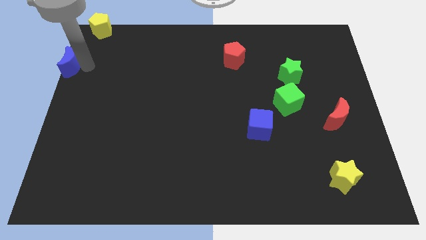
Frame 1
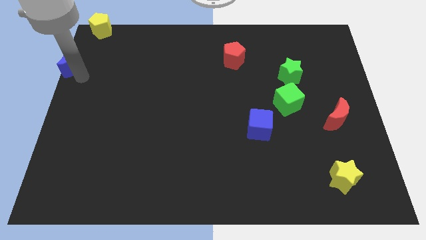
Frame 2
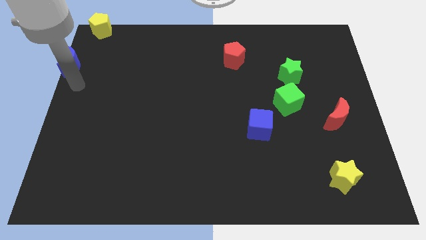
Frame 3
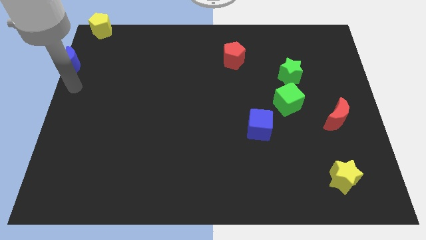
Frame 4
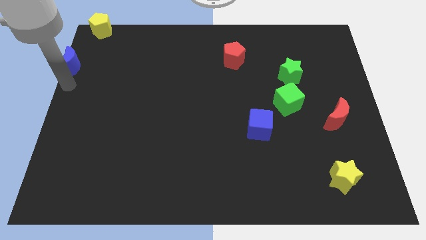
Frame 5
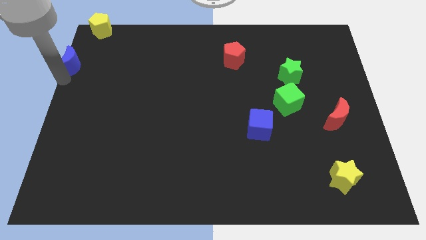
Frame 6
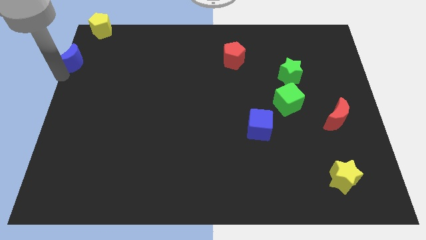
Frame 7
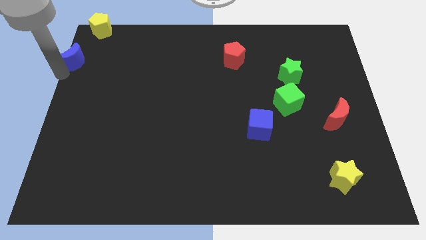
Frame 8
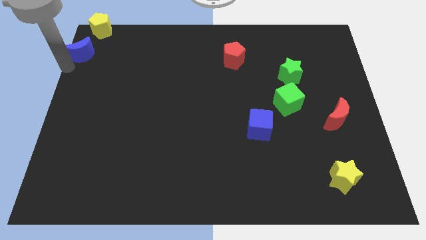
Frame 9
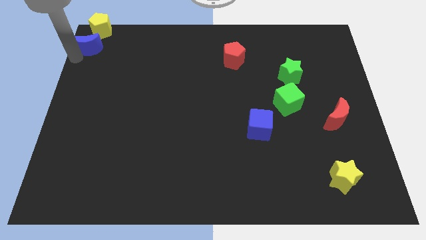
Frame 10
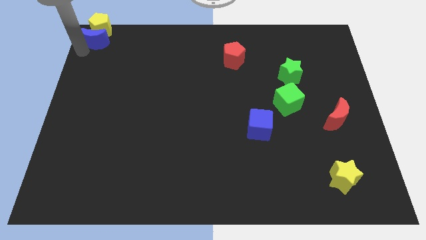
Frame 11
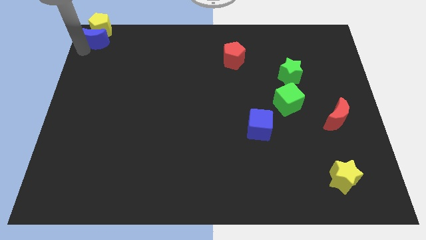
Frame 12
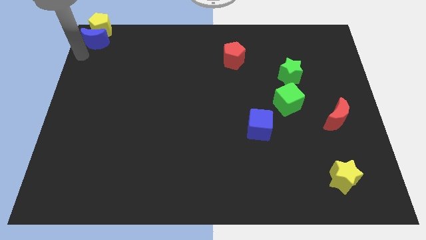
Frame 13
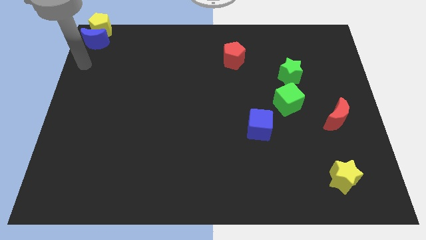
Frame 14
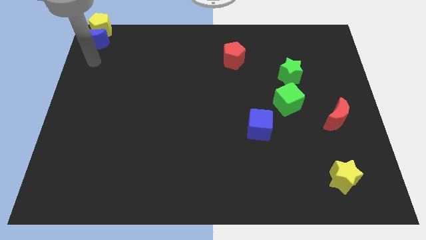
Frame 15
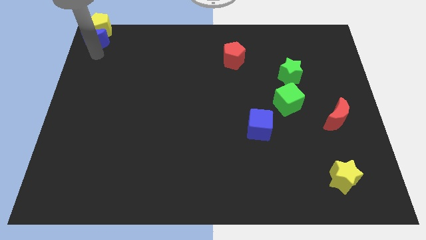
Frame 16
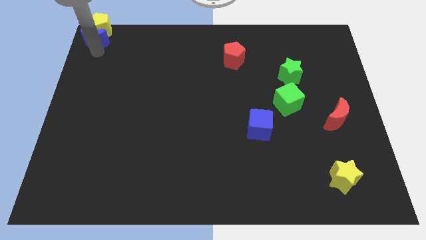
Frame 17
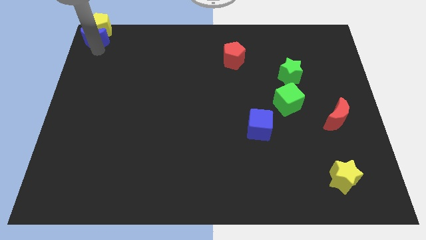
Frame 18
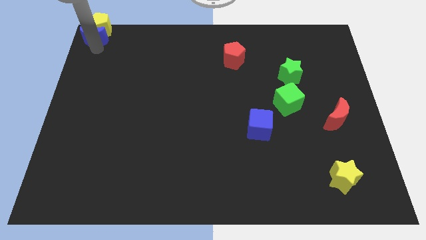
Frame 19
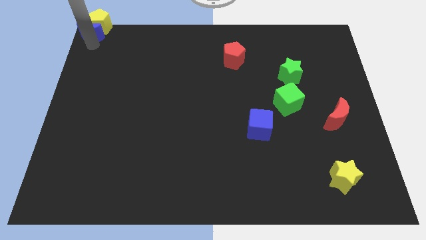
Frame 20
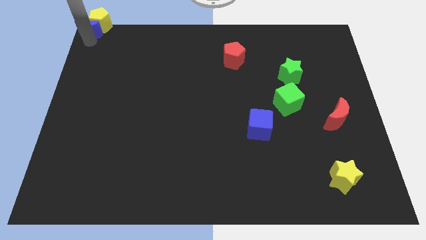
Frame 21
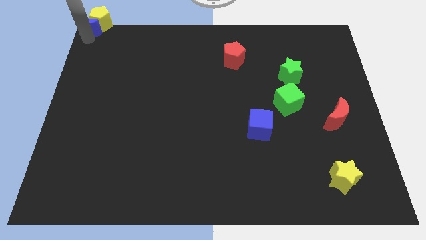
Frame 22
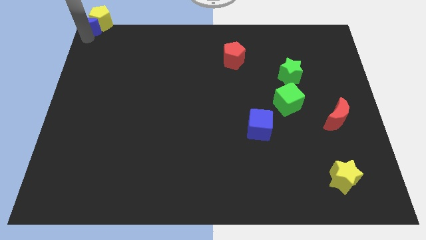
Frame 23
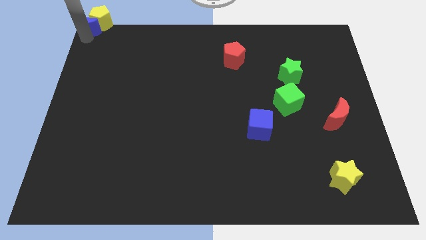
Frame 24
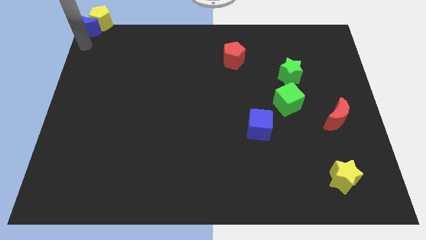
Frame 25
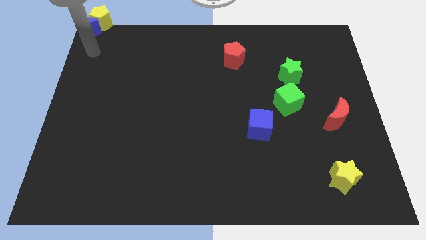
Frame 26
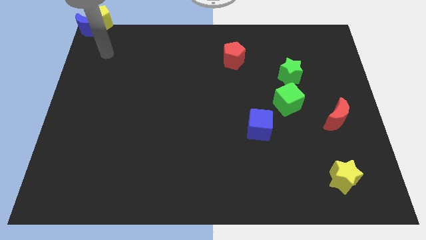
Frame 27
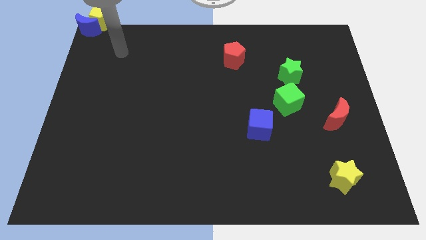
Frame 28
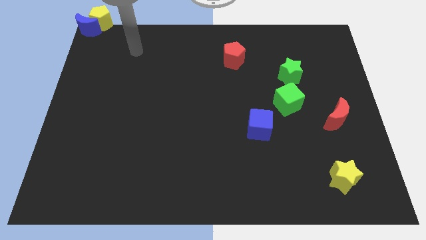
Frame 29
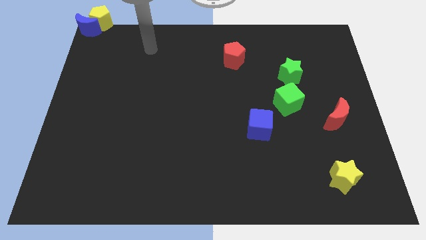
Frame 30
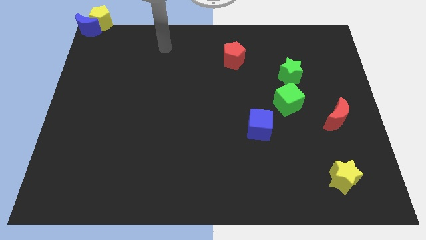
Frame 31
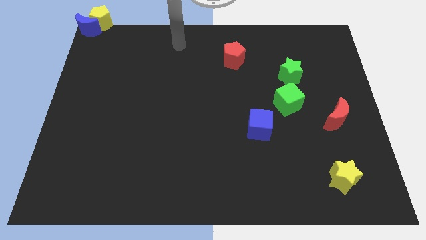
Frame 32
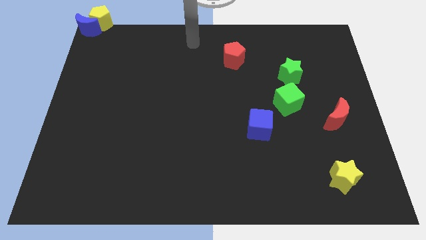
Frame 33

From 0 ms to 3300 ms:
push the blue crescent into the yellow pentagon

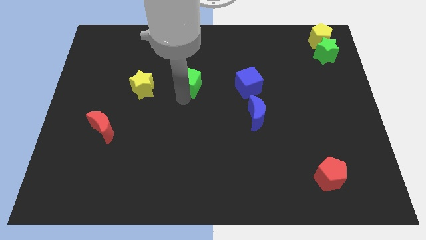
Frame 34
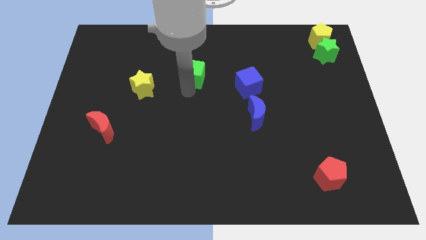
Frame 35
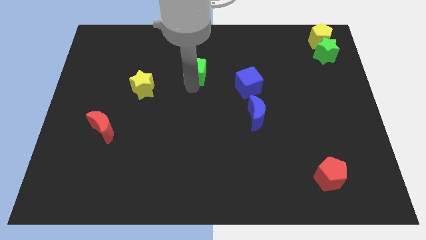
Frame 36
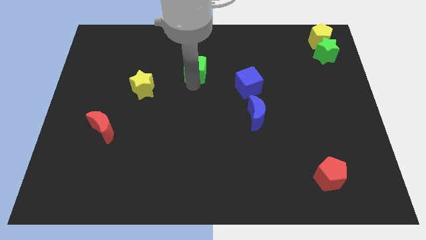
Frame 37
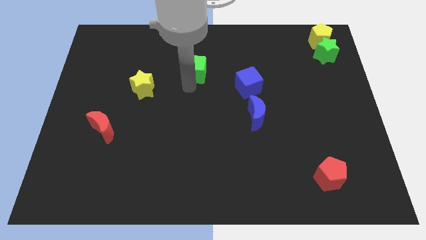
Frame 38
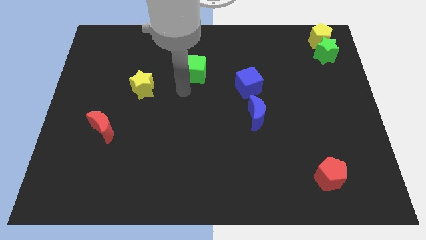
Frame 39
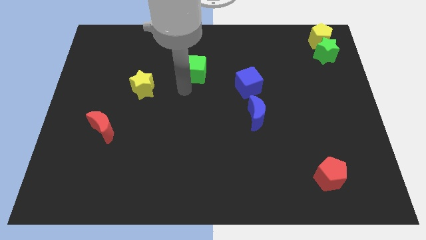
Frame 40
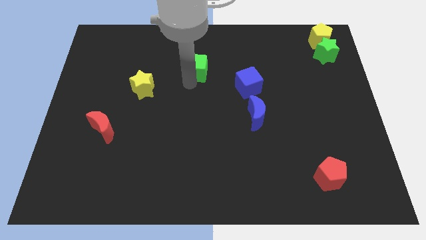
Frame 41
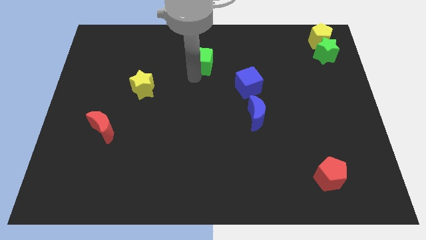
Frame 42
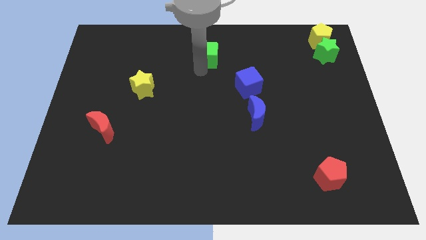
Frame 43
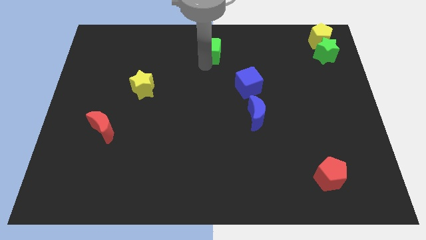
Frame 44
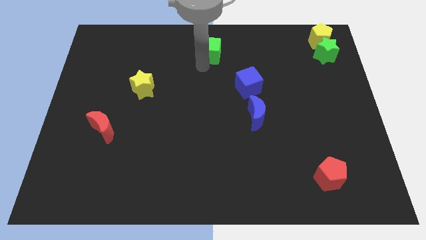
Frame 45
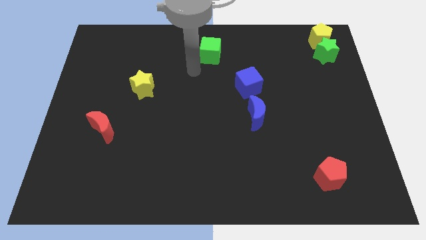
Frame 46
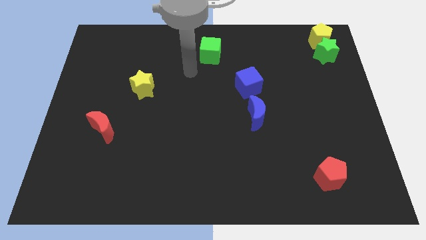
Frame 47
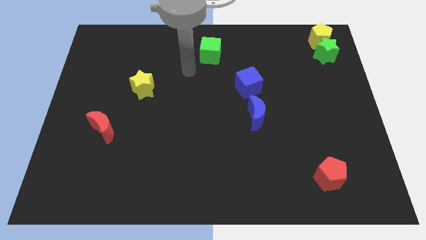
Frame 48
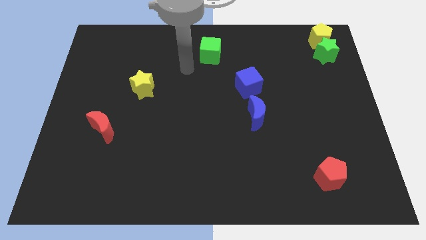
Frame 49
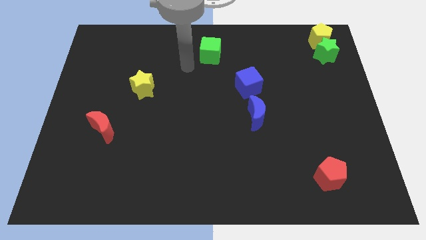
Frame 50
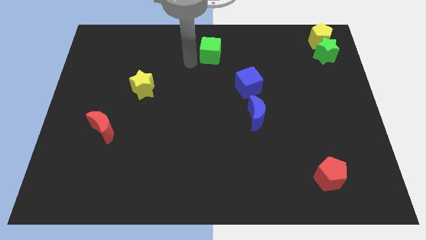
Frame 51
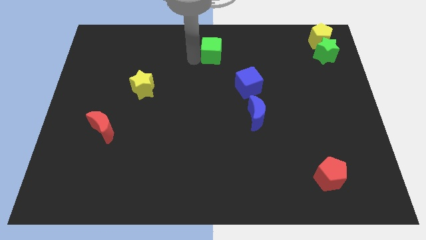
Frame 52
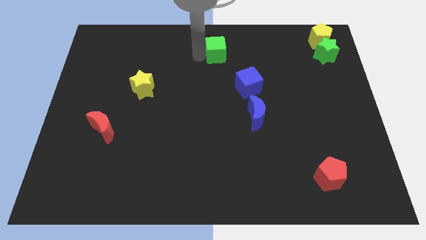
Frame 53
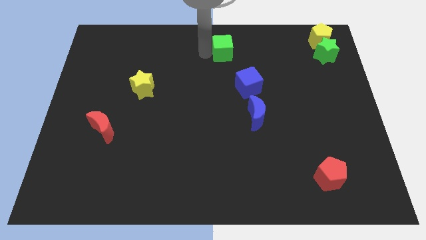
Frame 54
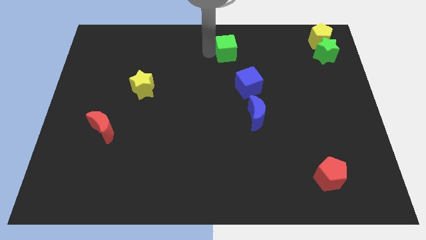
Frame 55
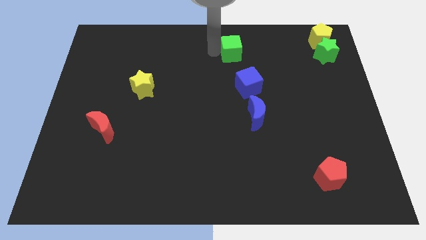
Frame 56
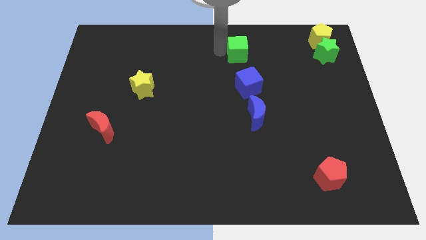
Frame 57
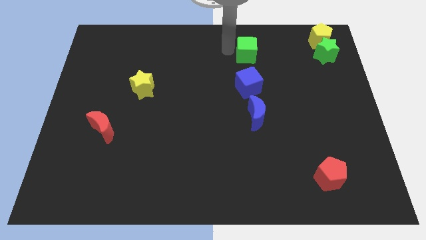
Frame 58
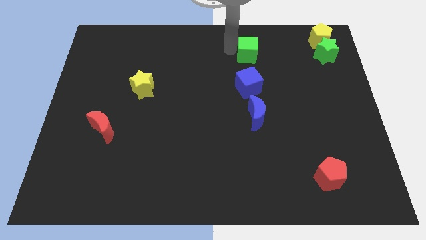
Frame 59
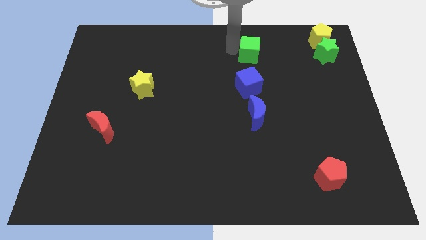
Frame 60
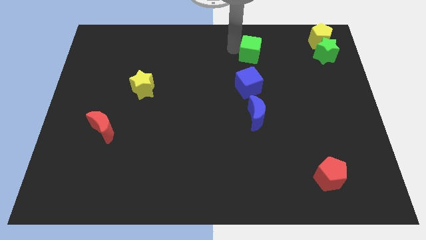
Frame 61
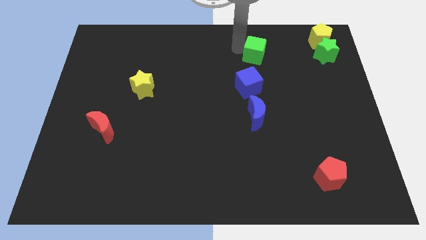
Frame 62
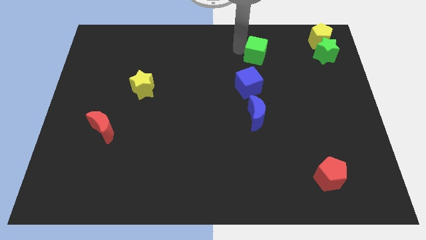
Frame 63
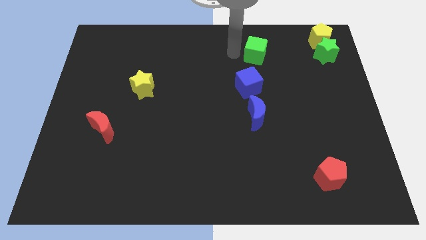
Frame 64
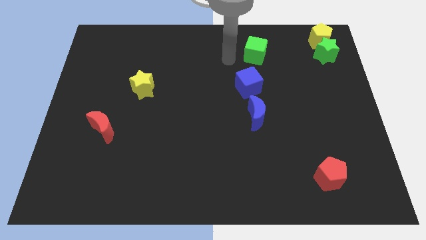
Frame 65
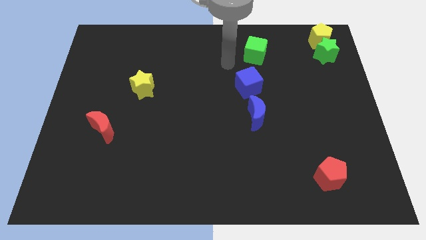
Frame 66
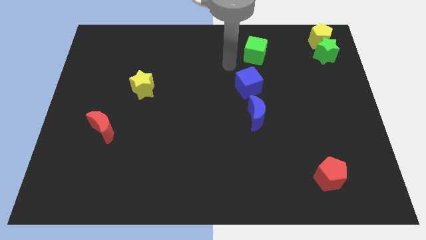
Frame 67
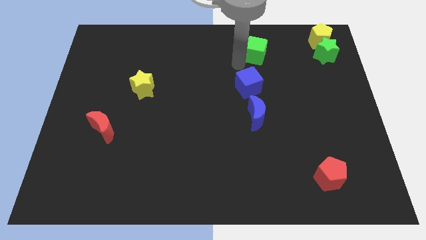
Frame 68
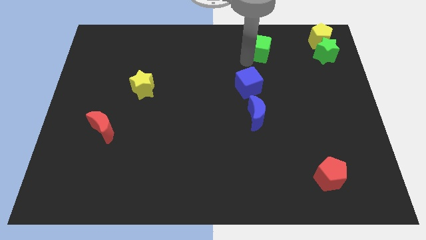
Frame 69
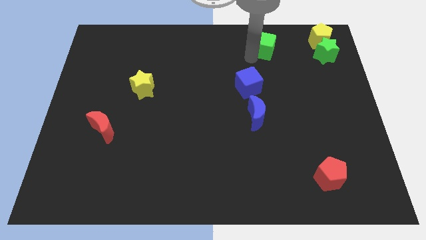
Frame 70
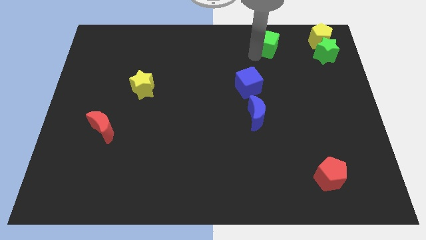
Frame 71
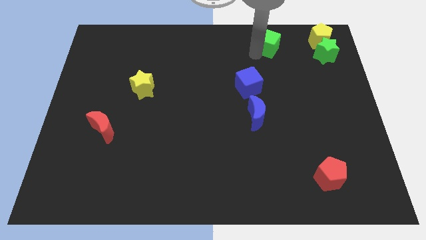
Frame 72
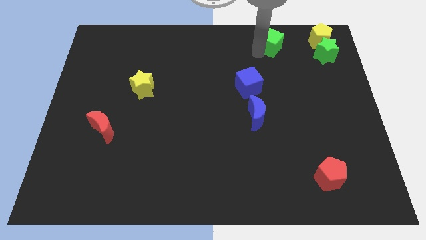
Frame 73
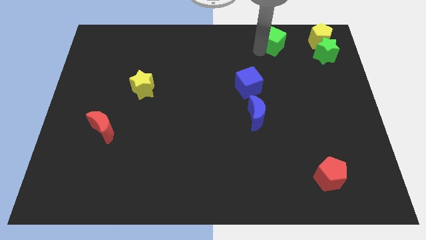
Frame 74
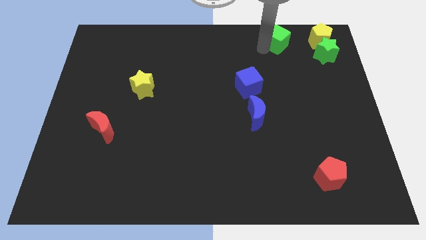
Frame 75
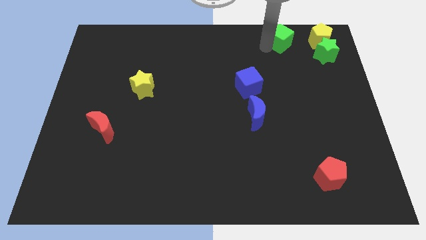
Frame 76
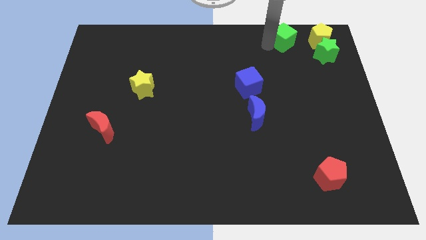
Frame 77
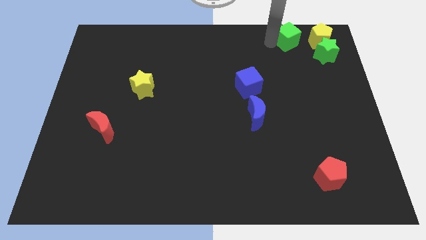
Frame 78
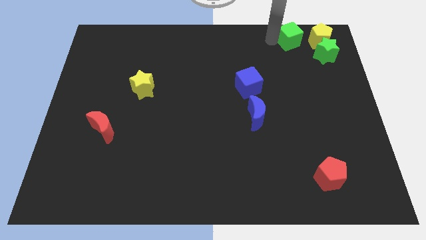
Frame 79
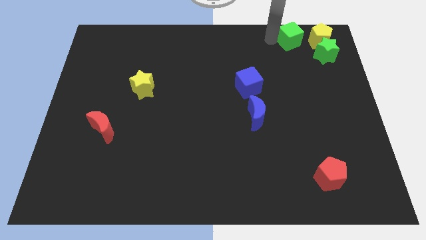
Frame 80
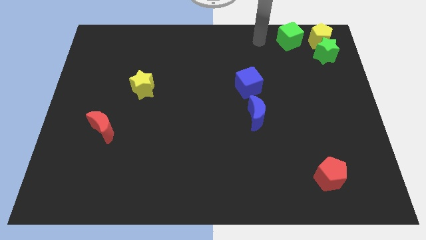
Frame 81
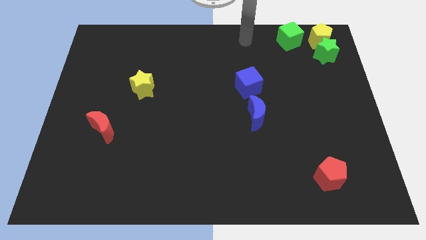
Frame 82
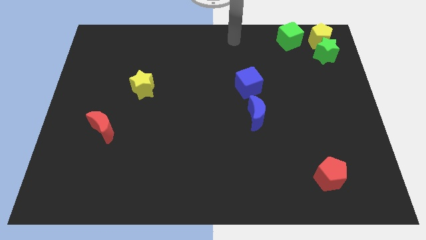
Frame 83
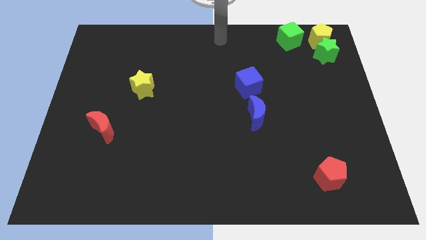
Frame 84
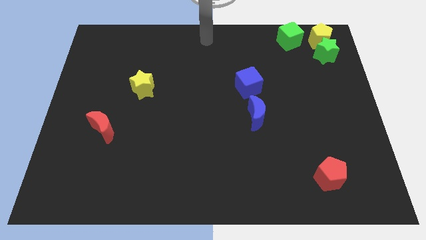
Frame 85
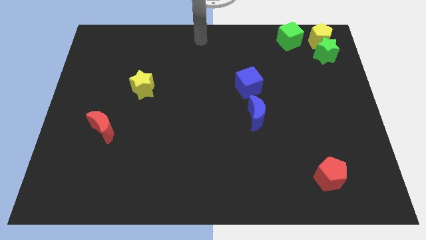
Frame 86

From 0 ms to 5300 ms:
move the green cube to the left of yellow pentagon

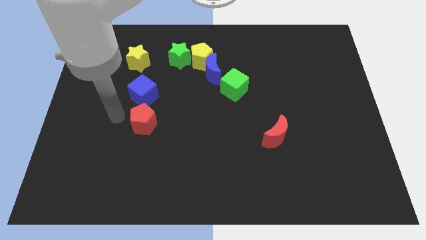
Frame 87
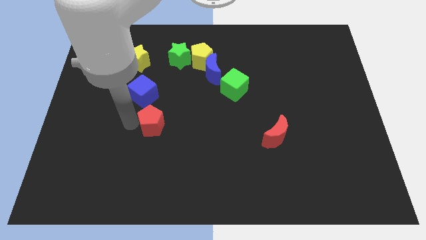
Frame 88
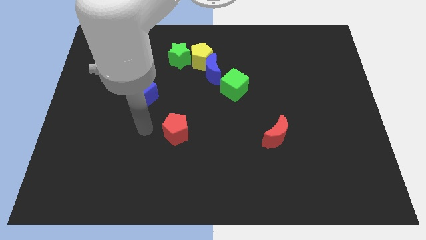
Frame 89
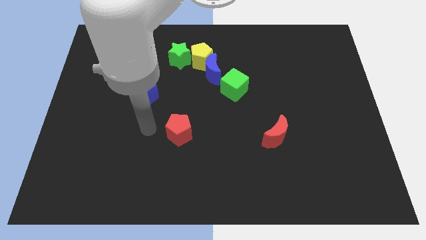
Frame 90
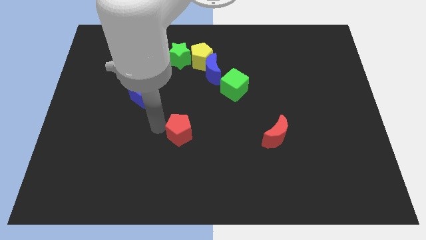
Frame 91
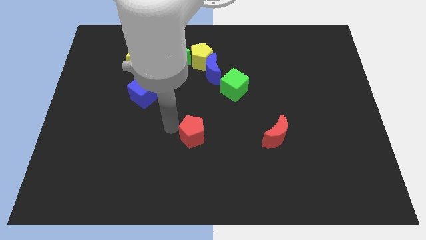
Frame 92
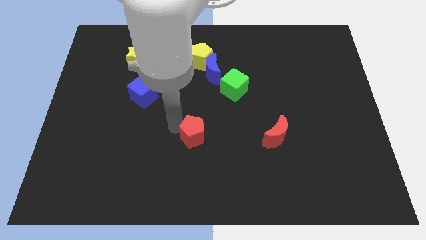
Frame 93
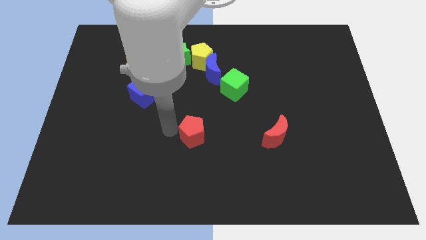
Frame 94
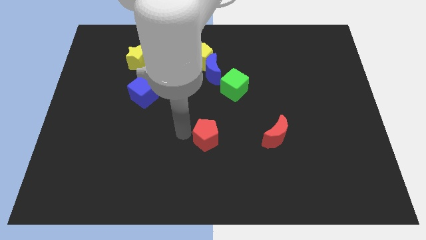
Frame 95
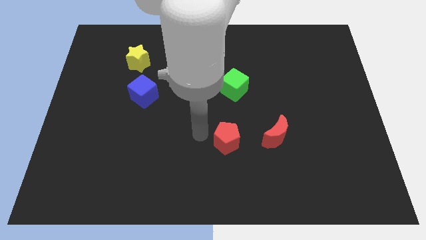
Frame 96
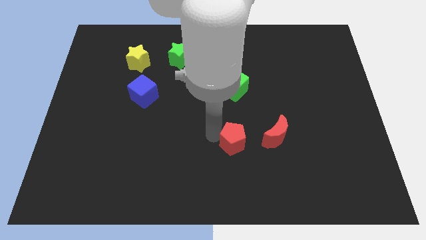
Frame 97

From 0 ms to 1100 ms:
separate red pentagon from the blue cube
